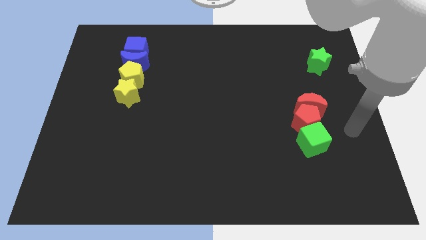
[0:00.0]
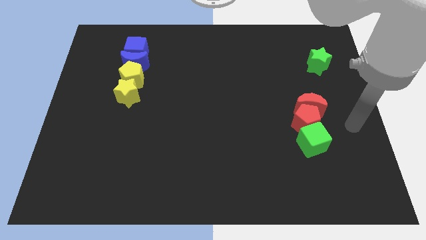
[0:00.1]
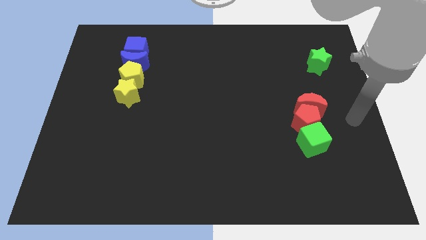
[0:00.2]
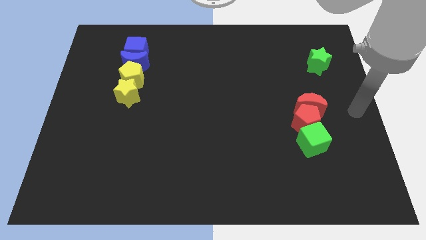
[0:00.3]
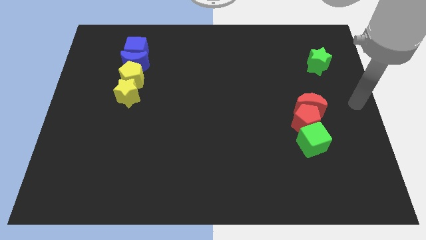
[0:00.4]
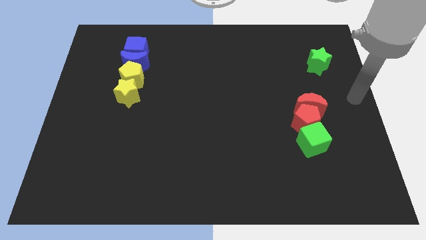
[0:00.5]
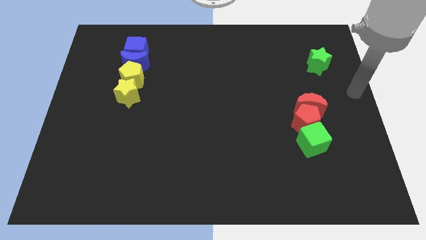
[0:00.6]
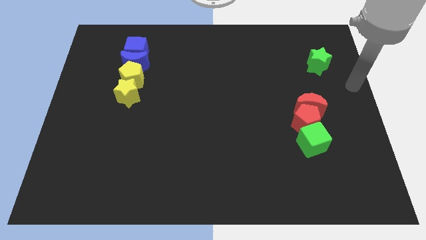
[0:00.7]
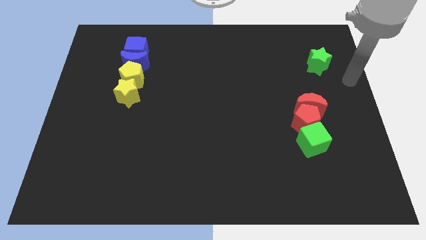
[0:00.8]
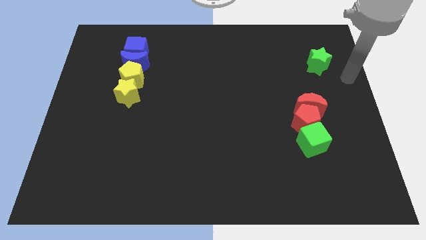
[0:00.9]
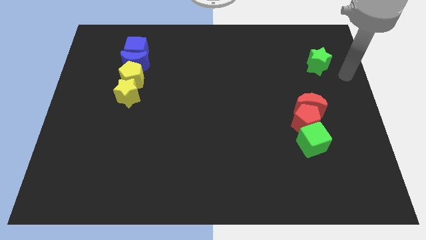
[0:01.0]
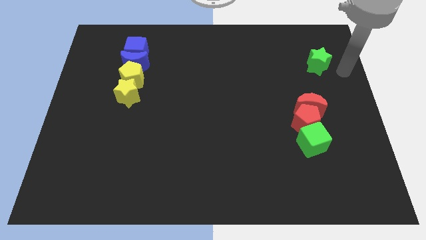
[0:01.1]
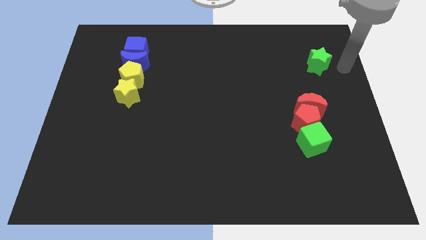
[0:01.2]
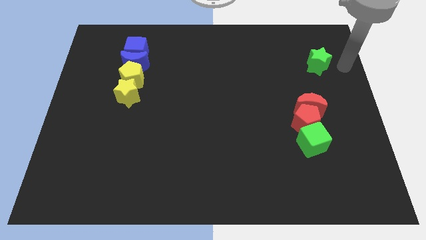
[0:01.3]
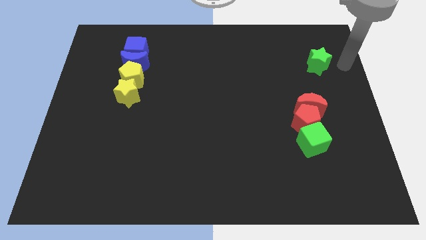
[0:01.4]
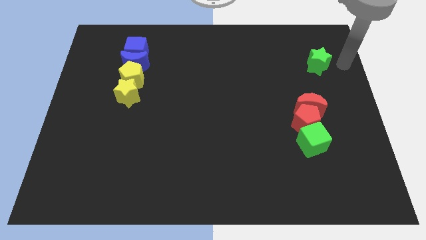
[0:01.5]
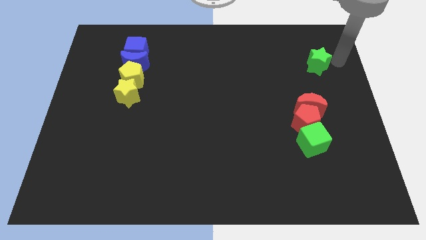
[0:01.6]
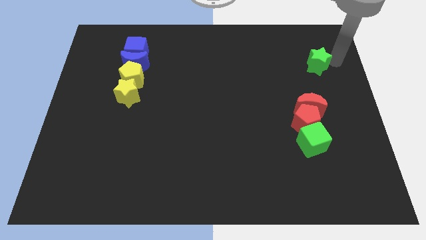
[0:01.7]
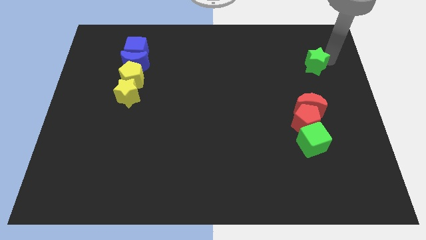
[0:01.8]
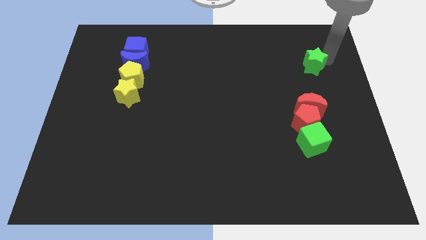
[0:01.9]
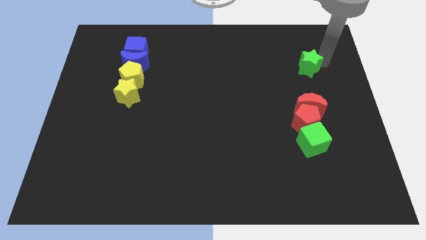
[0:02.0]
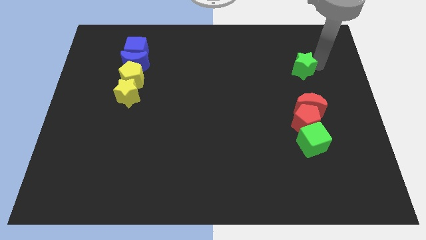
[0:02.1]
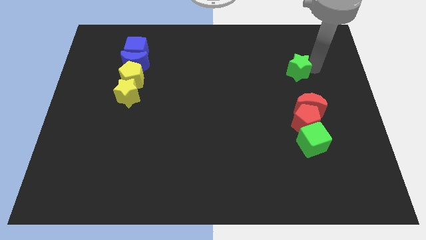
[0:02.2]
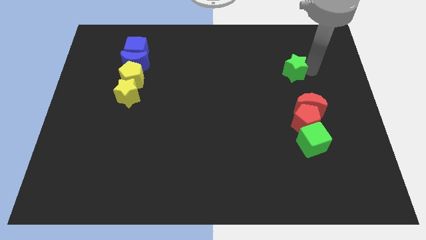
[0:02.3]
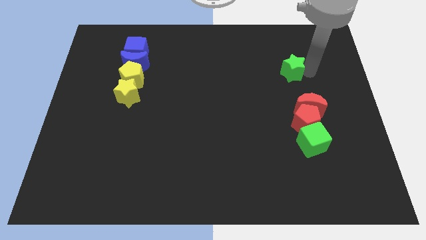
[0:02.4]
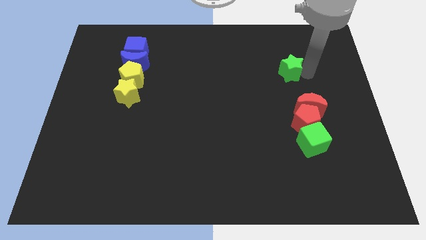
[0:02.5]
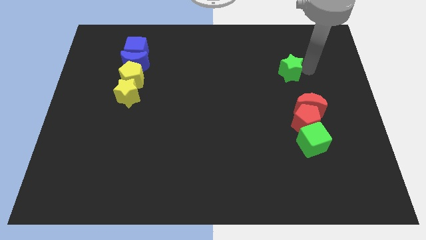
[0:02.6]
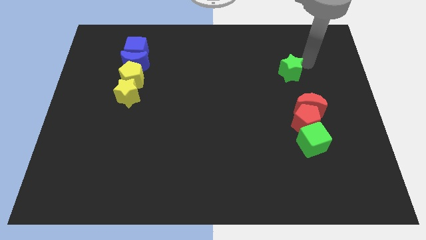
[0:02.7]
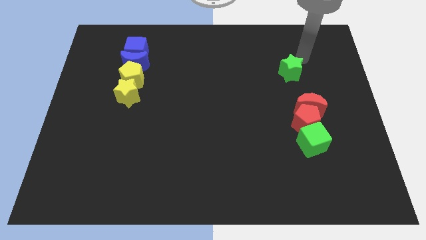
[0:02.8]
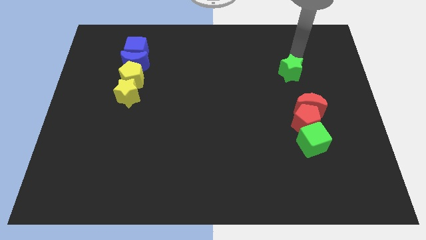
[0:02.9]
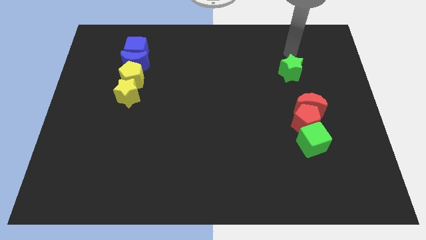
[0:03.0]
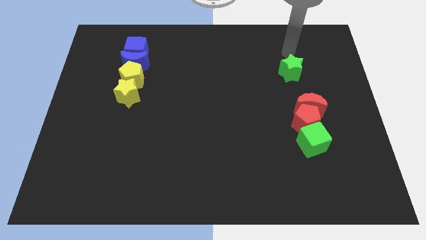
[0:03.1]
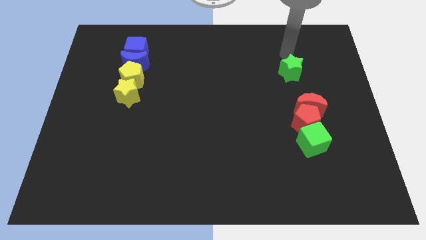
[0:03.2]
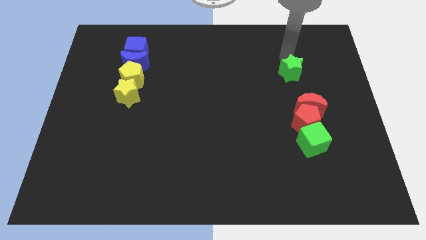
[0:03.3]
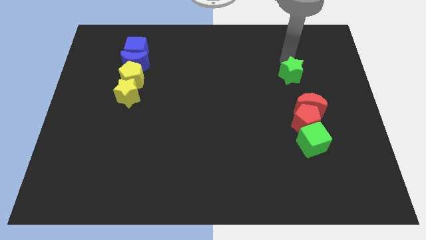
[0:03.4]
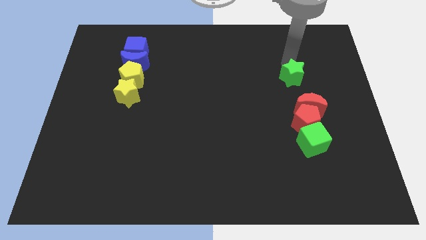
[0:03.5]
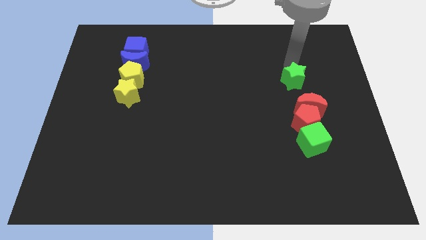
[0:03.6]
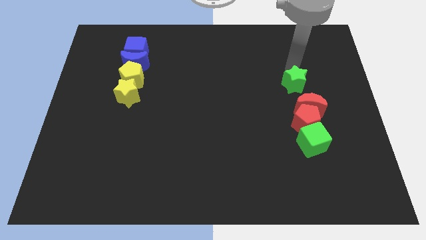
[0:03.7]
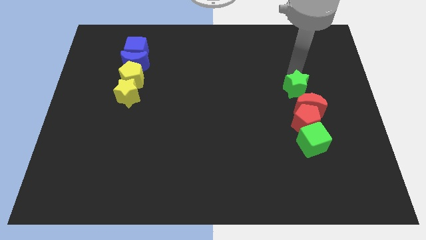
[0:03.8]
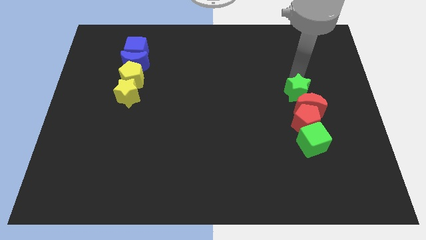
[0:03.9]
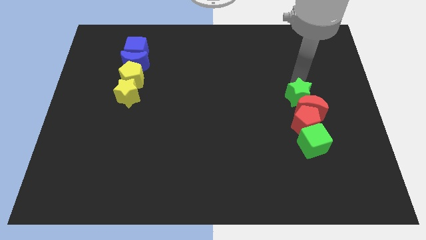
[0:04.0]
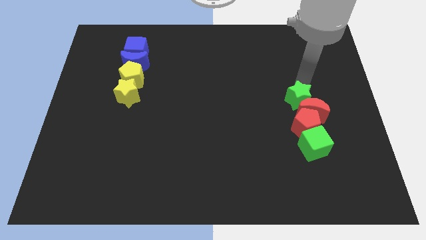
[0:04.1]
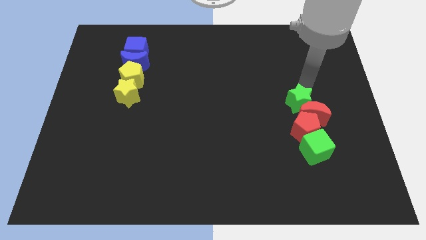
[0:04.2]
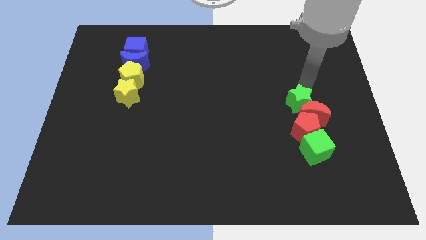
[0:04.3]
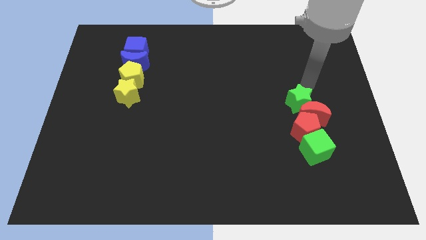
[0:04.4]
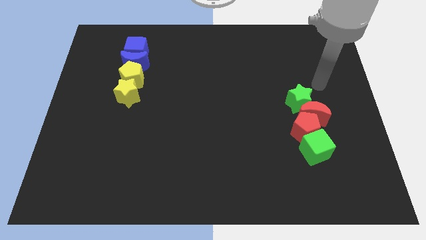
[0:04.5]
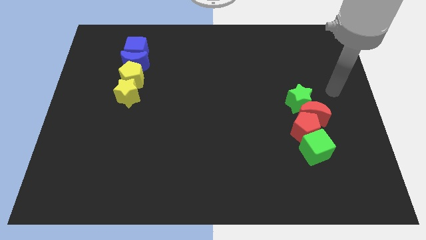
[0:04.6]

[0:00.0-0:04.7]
place the green star above the red crescent

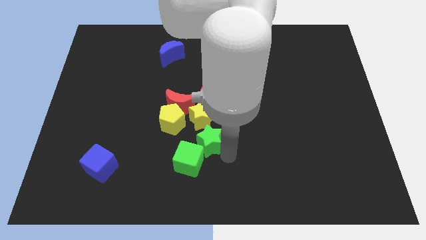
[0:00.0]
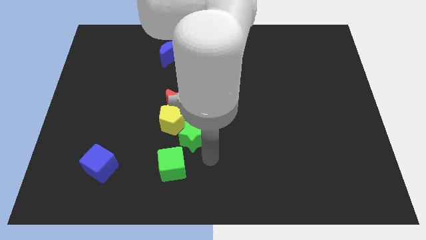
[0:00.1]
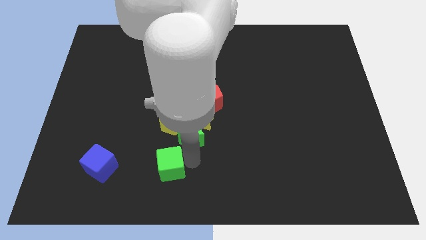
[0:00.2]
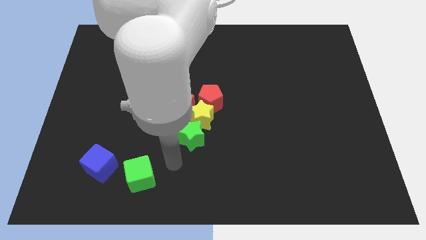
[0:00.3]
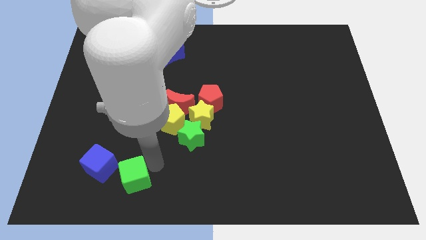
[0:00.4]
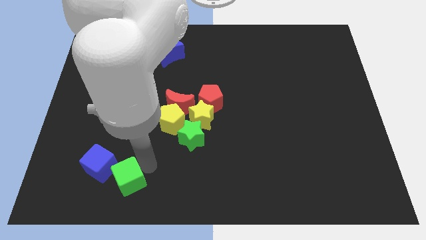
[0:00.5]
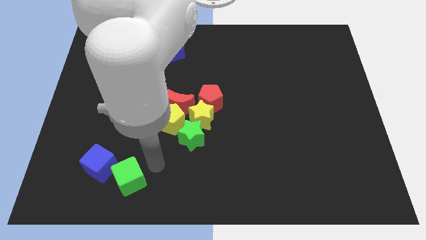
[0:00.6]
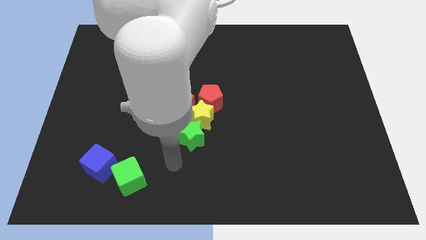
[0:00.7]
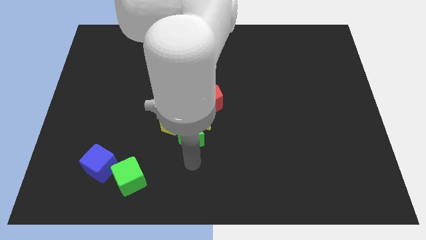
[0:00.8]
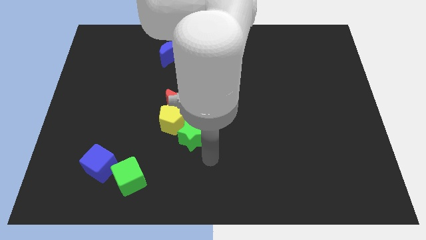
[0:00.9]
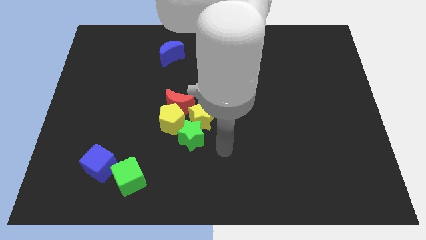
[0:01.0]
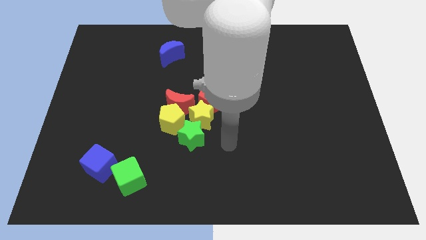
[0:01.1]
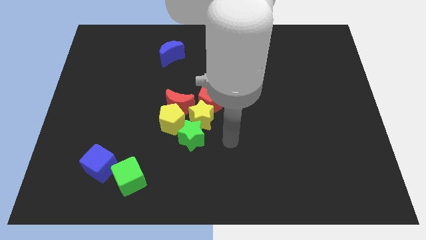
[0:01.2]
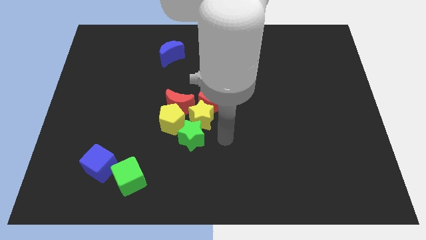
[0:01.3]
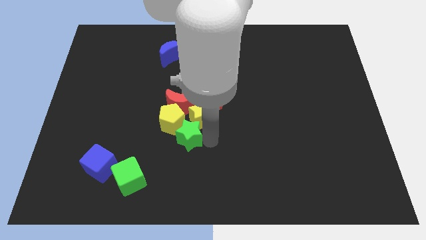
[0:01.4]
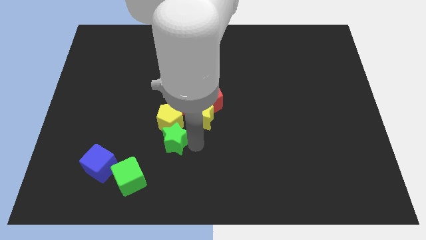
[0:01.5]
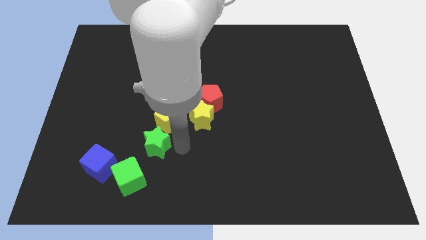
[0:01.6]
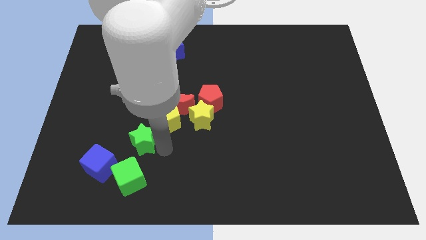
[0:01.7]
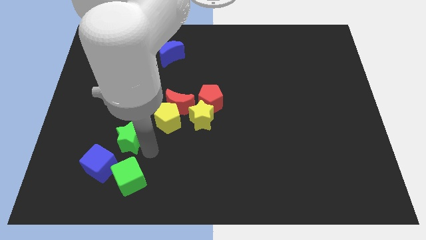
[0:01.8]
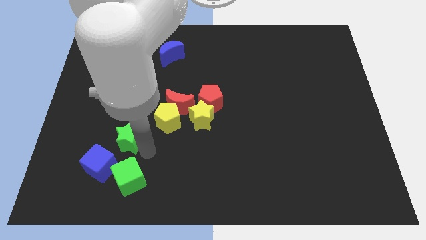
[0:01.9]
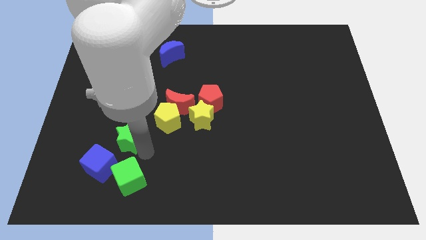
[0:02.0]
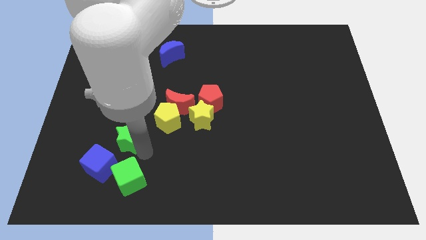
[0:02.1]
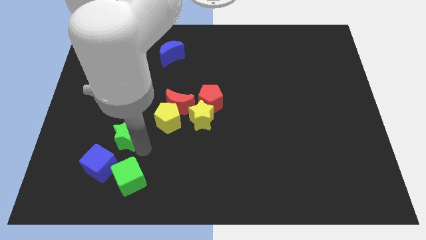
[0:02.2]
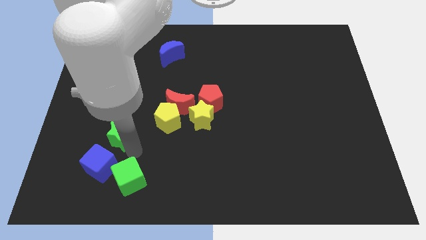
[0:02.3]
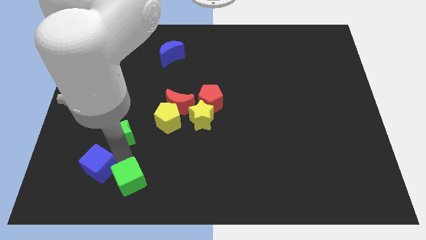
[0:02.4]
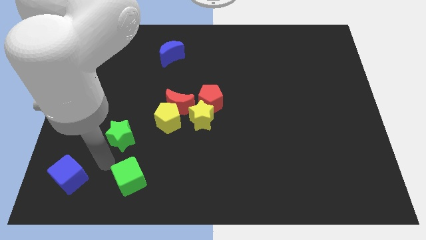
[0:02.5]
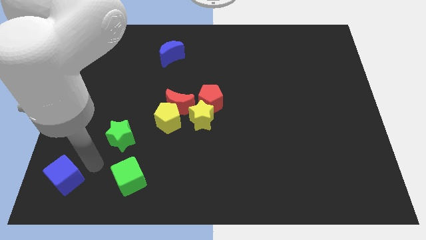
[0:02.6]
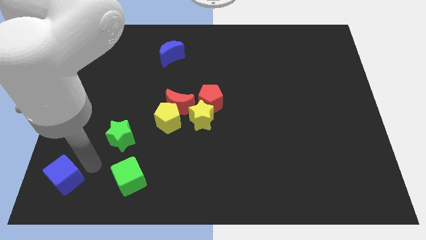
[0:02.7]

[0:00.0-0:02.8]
separate the green star and green cube

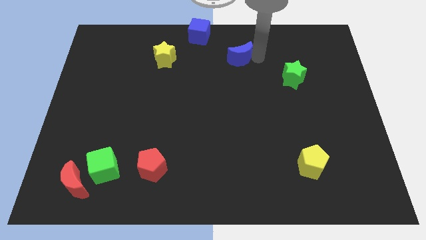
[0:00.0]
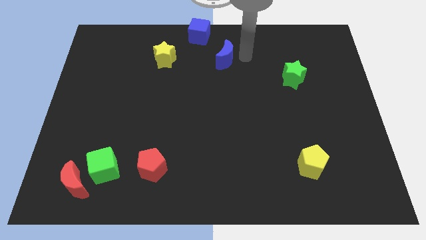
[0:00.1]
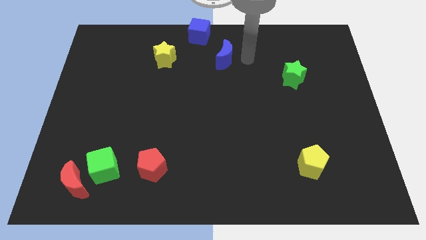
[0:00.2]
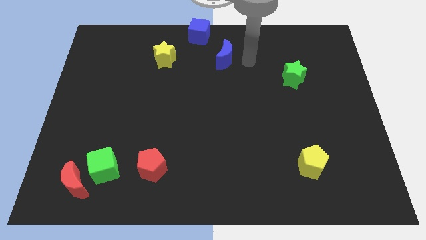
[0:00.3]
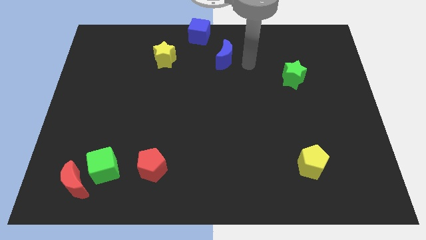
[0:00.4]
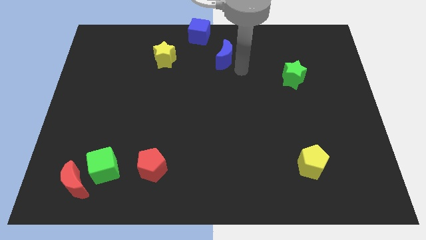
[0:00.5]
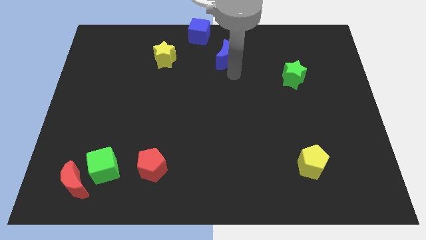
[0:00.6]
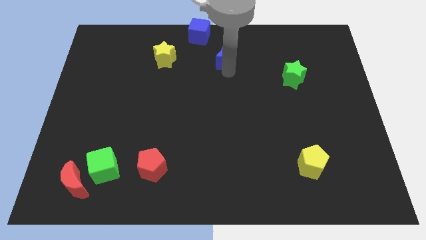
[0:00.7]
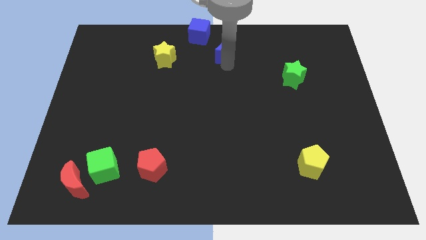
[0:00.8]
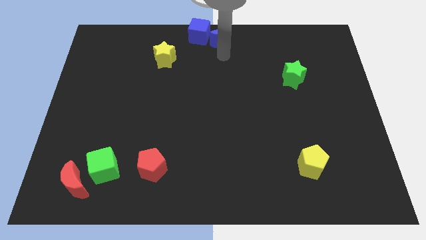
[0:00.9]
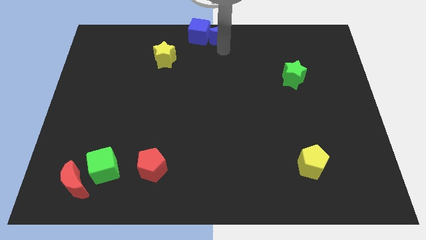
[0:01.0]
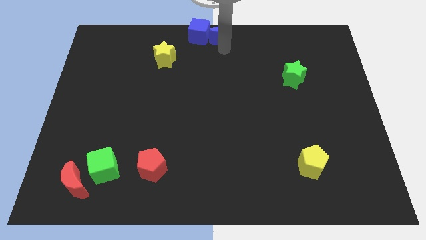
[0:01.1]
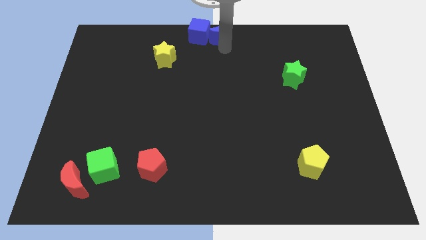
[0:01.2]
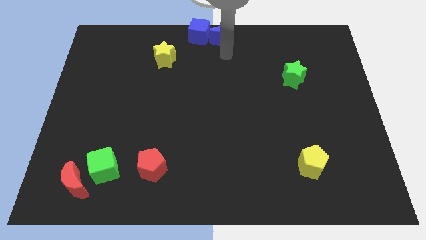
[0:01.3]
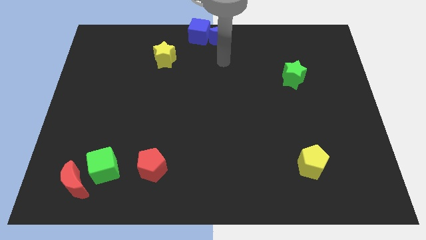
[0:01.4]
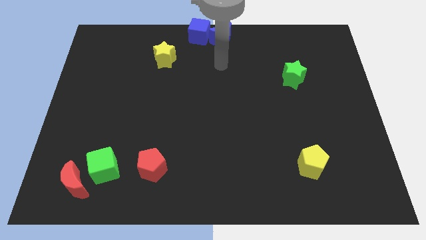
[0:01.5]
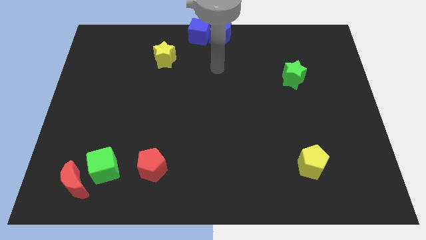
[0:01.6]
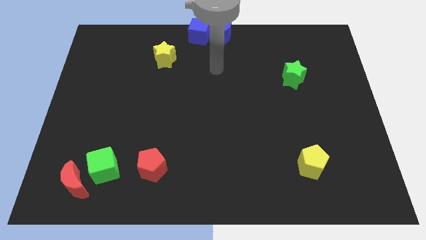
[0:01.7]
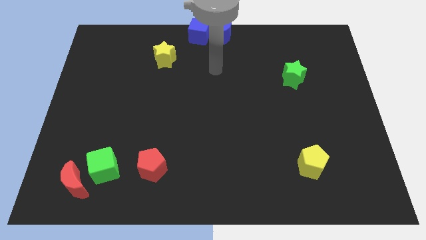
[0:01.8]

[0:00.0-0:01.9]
push the blue moon right to the blue cube
